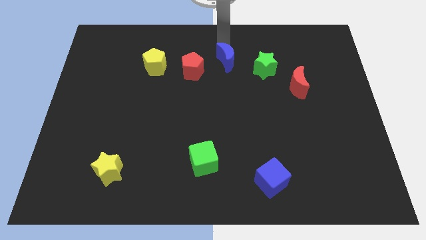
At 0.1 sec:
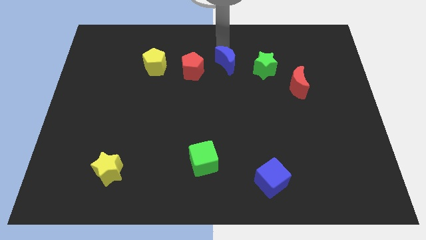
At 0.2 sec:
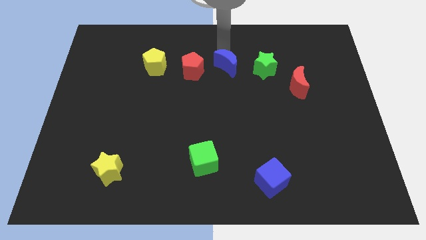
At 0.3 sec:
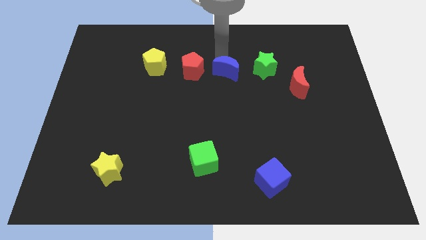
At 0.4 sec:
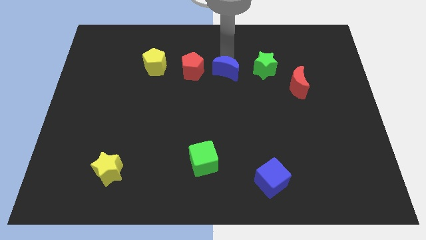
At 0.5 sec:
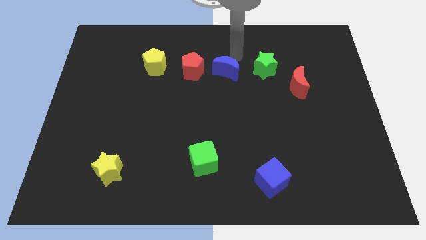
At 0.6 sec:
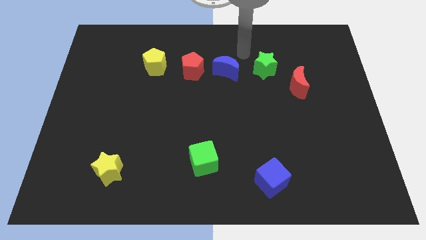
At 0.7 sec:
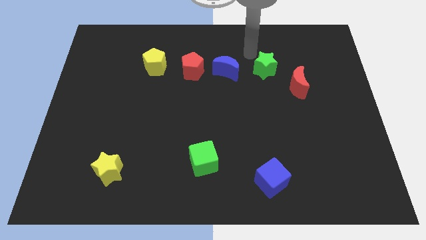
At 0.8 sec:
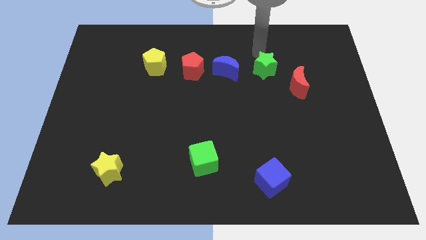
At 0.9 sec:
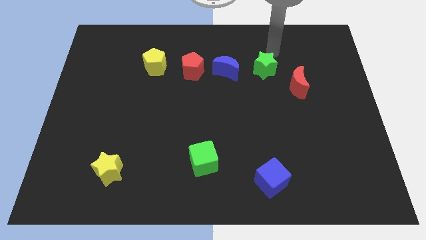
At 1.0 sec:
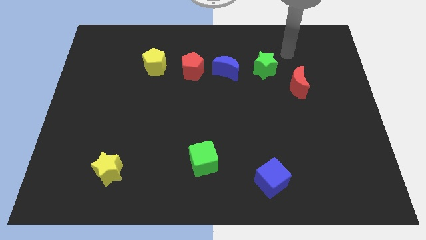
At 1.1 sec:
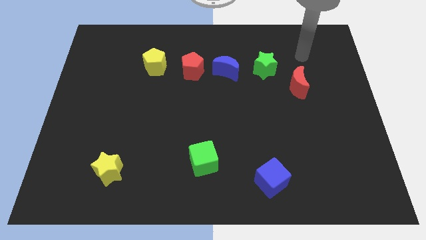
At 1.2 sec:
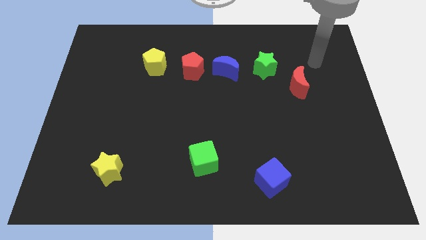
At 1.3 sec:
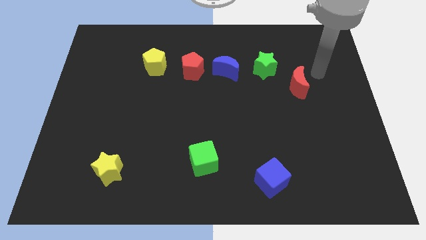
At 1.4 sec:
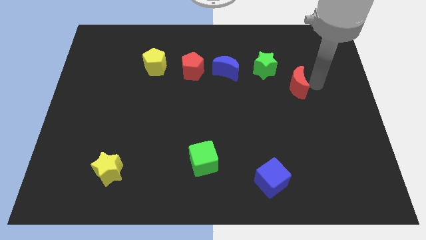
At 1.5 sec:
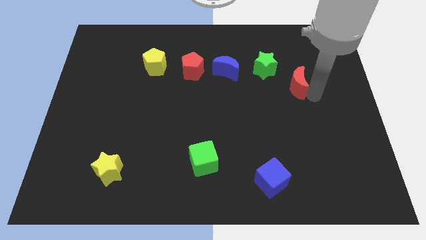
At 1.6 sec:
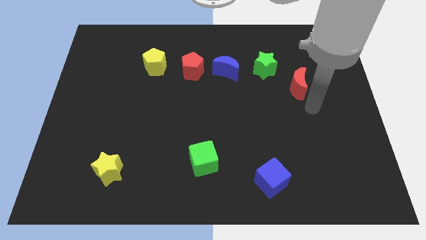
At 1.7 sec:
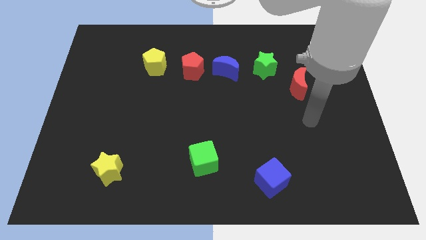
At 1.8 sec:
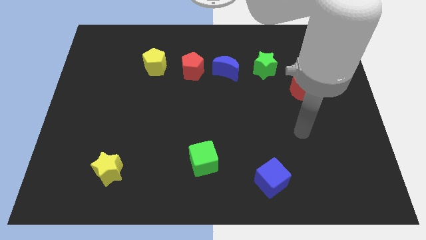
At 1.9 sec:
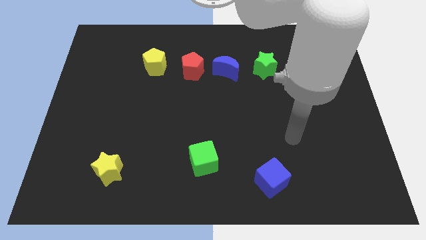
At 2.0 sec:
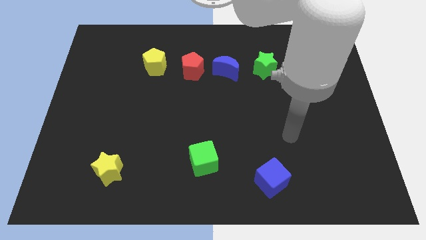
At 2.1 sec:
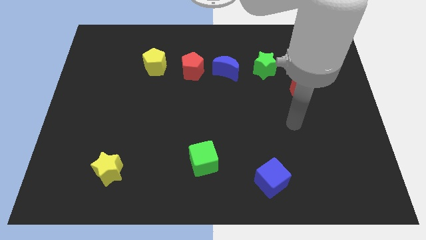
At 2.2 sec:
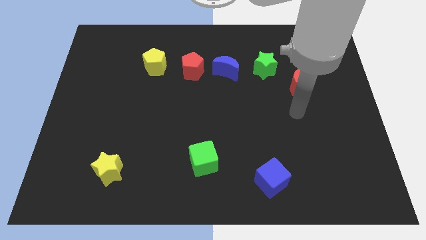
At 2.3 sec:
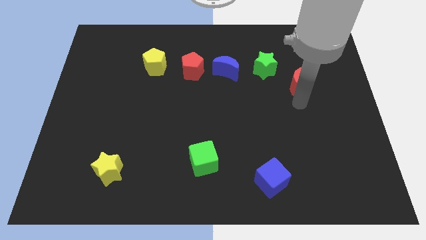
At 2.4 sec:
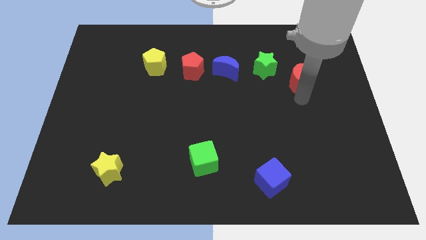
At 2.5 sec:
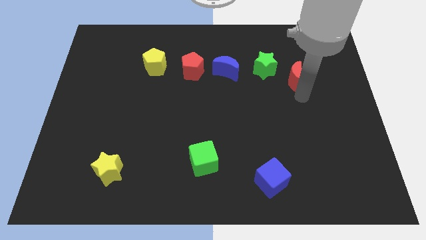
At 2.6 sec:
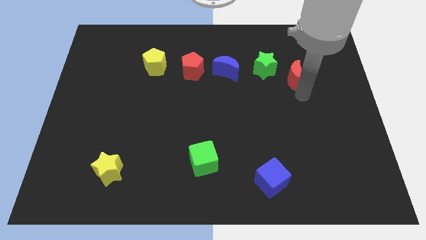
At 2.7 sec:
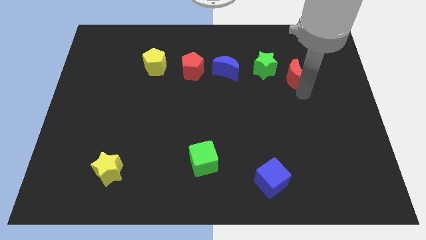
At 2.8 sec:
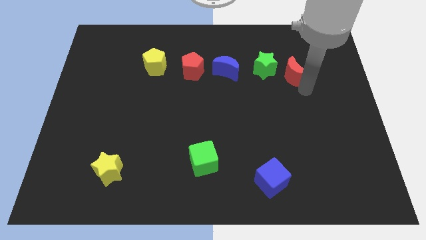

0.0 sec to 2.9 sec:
push red crescent slightly toward upward

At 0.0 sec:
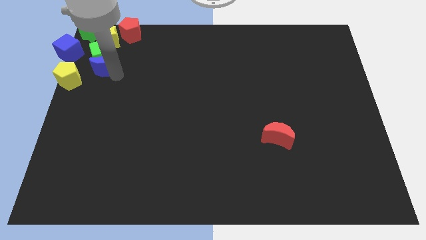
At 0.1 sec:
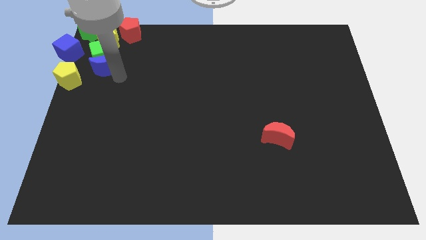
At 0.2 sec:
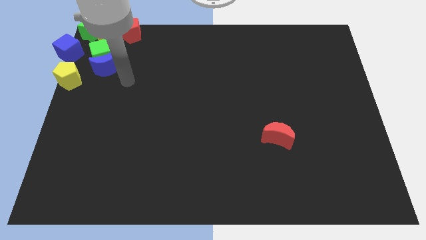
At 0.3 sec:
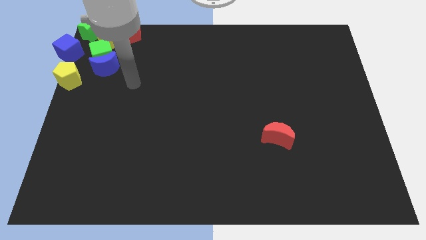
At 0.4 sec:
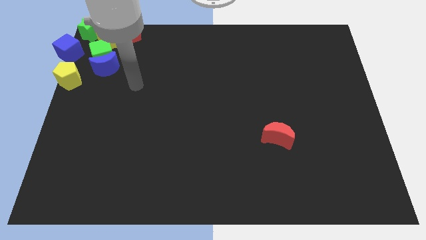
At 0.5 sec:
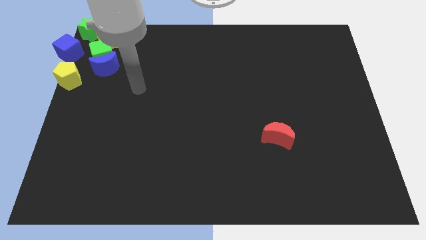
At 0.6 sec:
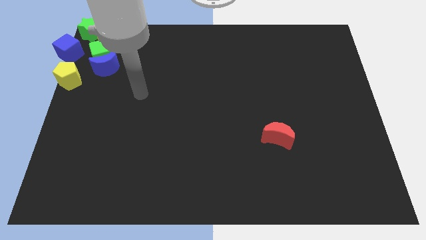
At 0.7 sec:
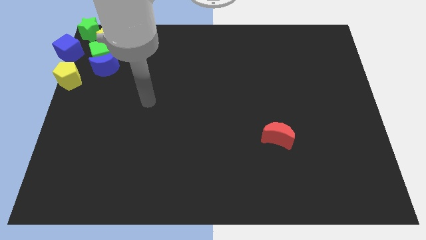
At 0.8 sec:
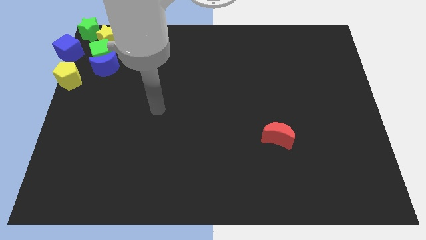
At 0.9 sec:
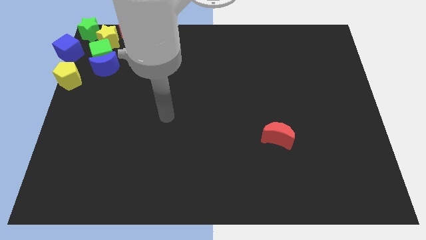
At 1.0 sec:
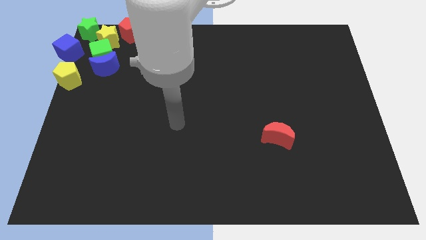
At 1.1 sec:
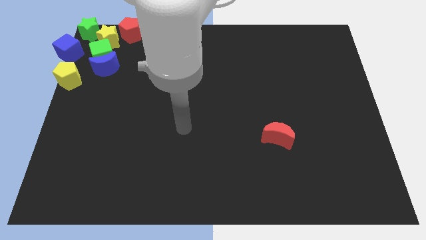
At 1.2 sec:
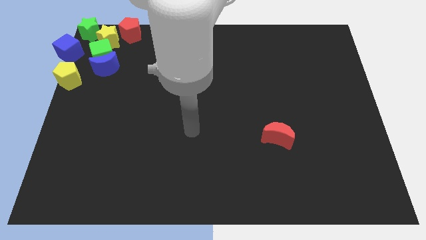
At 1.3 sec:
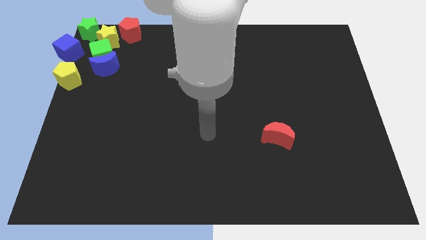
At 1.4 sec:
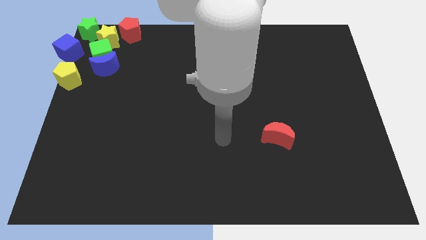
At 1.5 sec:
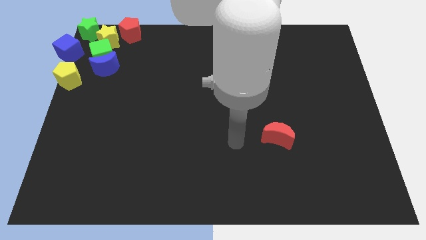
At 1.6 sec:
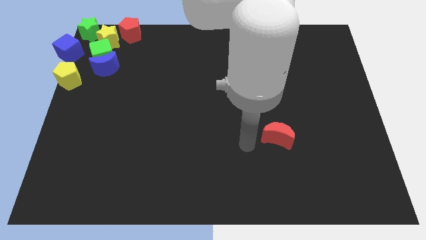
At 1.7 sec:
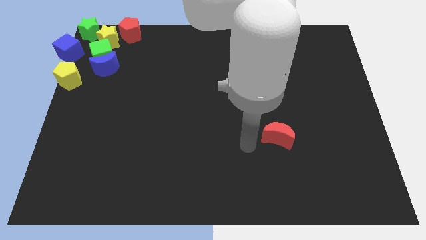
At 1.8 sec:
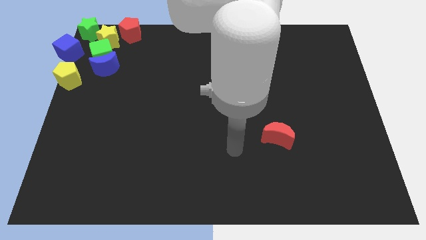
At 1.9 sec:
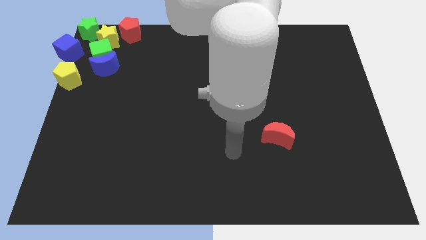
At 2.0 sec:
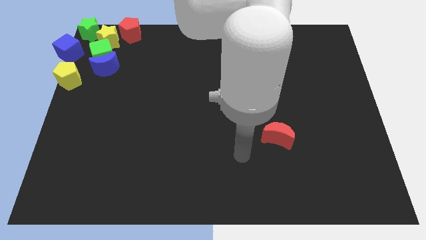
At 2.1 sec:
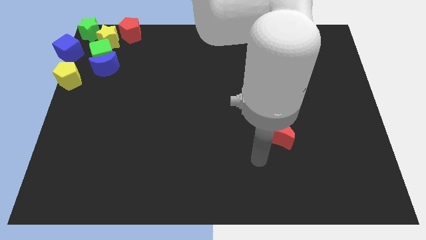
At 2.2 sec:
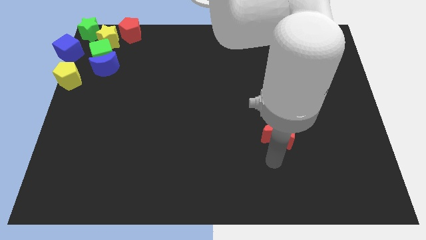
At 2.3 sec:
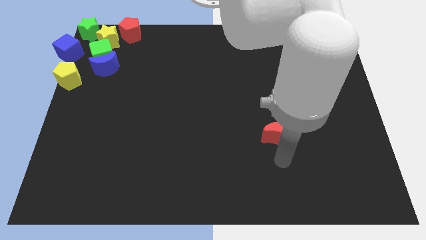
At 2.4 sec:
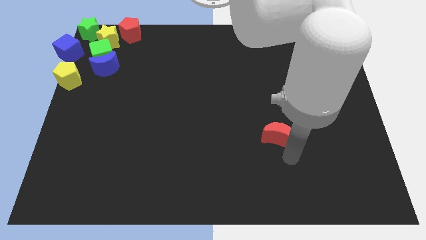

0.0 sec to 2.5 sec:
point your arm at the bottom of red moon

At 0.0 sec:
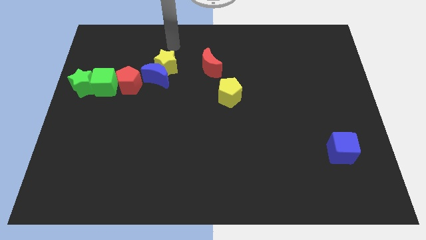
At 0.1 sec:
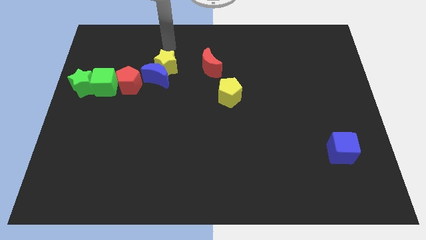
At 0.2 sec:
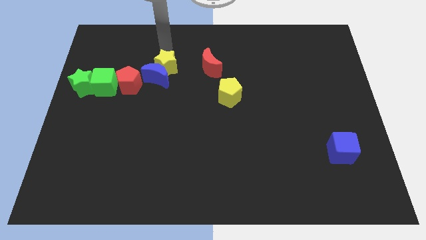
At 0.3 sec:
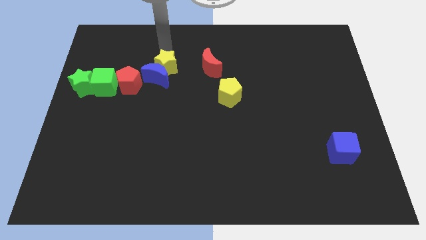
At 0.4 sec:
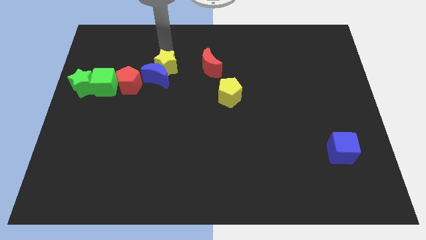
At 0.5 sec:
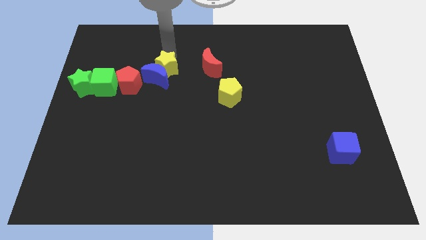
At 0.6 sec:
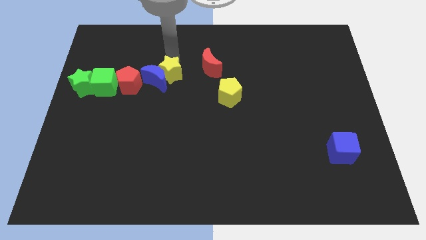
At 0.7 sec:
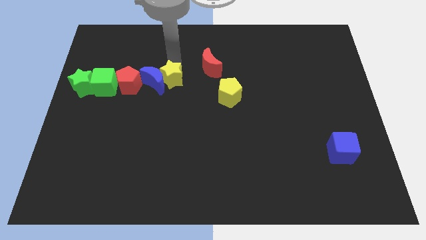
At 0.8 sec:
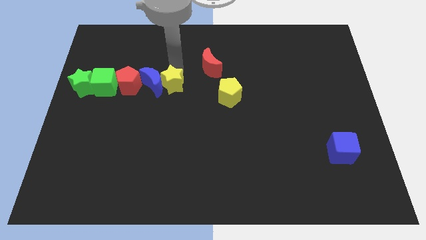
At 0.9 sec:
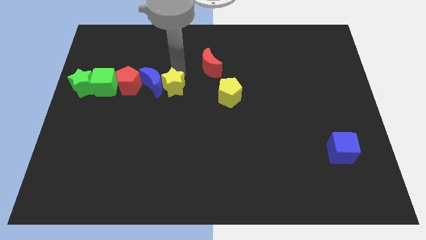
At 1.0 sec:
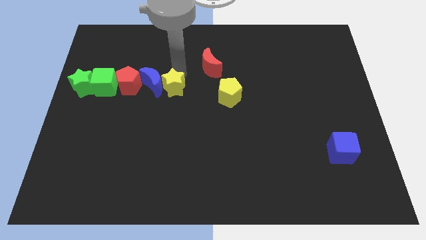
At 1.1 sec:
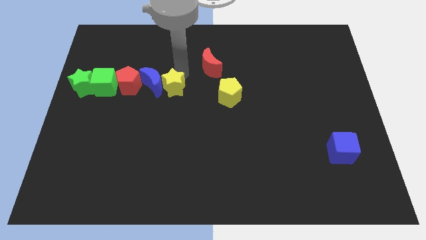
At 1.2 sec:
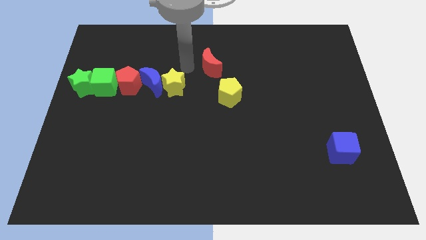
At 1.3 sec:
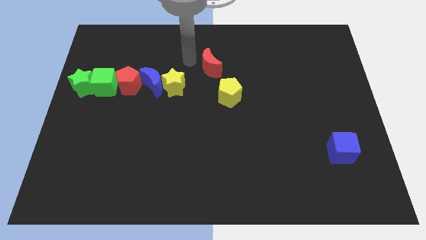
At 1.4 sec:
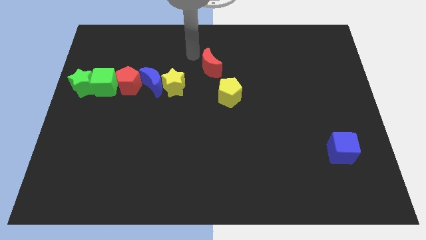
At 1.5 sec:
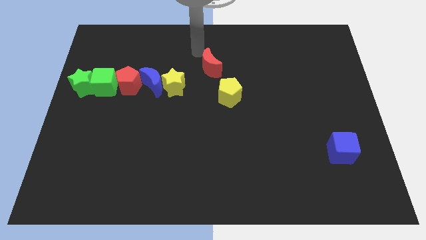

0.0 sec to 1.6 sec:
move the yellow star to the right of the blue crescent

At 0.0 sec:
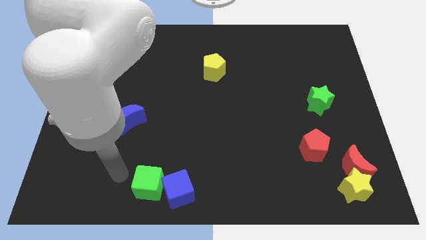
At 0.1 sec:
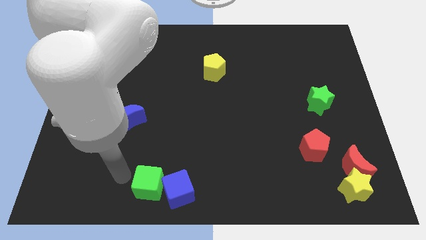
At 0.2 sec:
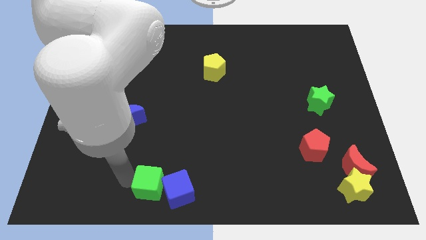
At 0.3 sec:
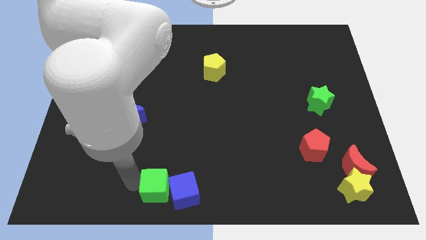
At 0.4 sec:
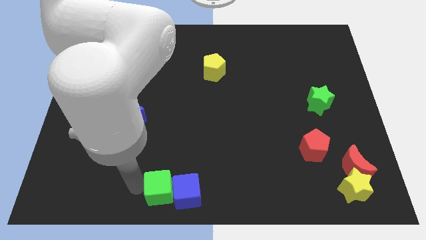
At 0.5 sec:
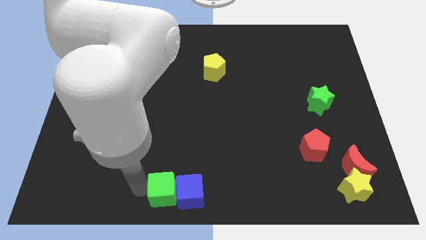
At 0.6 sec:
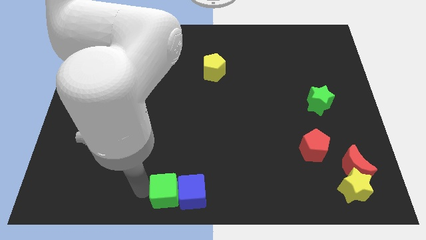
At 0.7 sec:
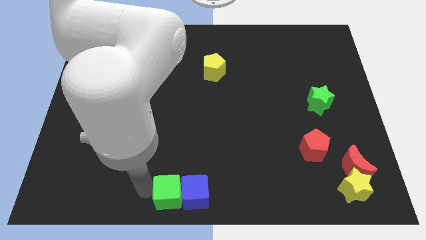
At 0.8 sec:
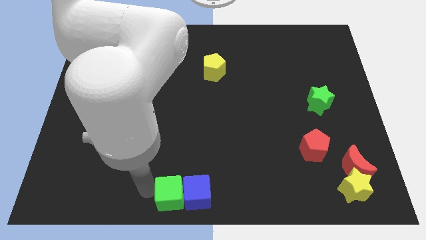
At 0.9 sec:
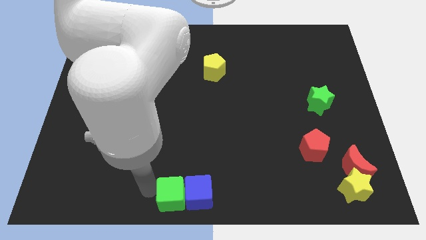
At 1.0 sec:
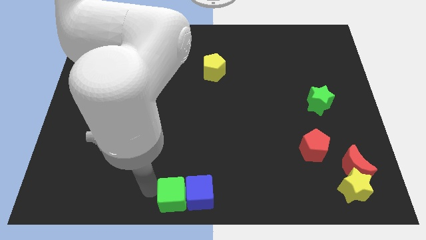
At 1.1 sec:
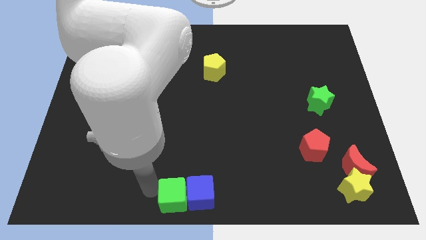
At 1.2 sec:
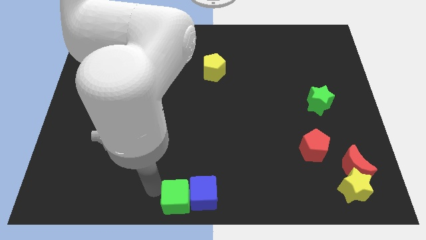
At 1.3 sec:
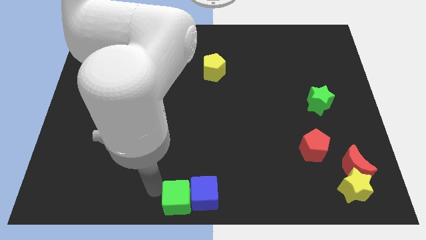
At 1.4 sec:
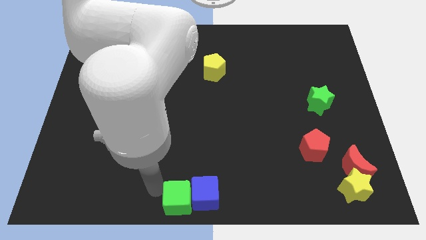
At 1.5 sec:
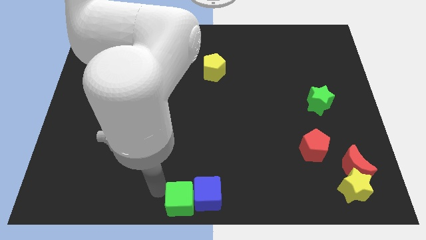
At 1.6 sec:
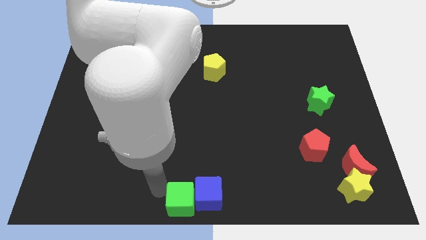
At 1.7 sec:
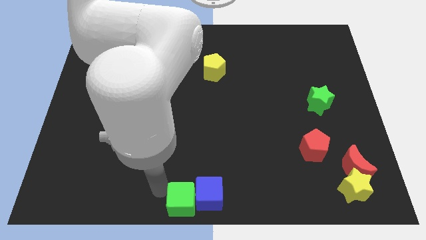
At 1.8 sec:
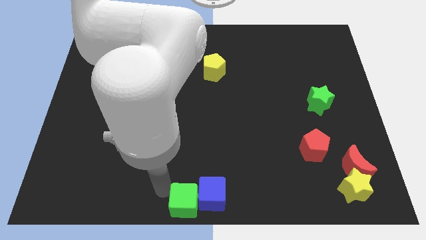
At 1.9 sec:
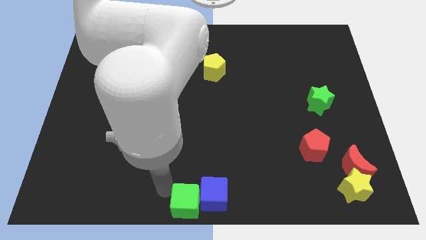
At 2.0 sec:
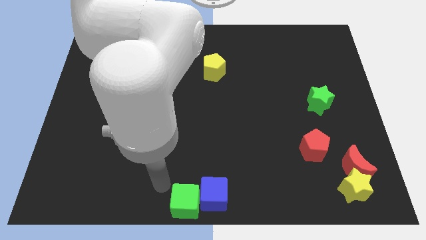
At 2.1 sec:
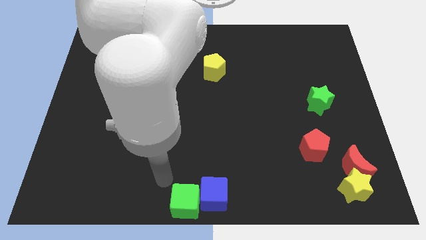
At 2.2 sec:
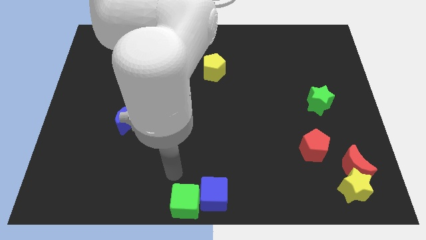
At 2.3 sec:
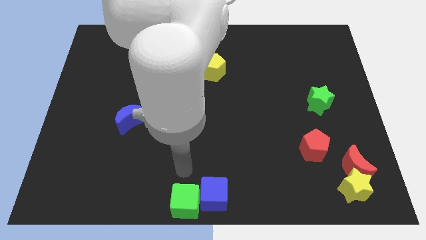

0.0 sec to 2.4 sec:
push the green cube downwards slightly
